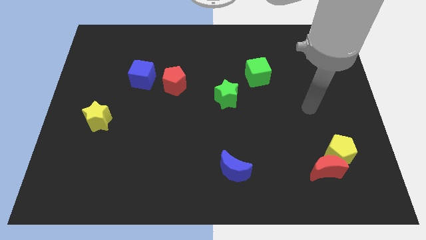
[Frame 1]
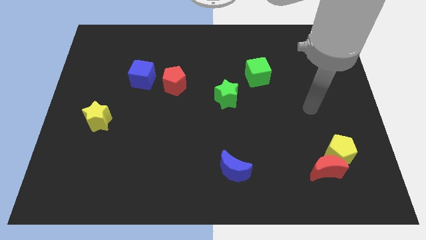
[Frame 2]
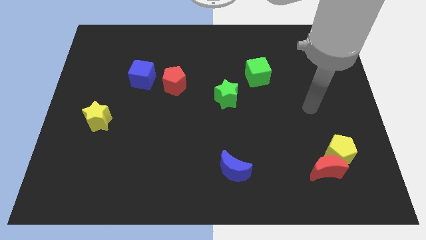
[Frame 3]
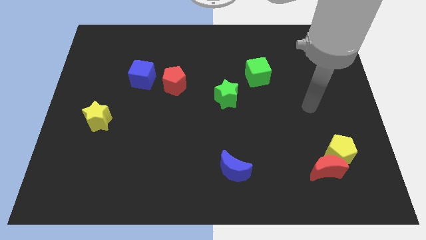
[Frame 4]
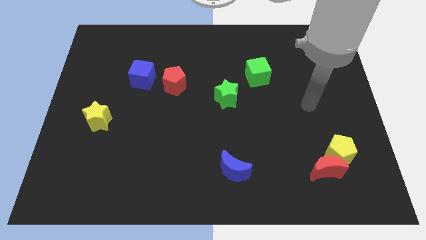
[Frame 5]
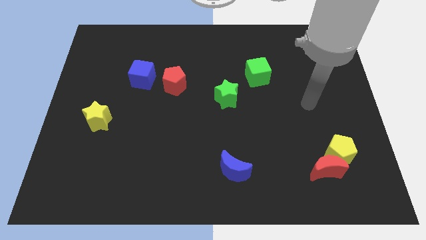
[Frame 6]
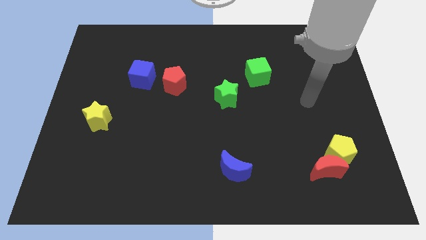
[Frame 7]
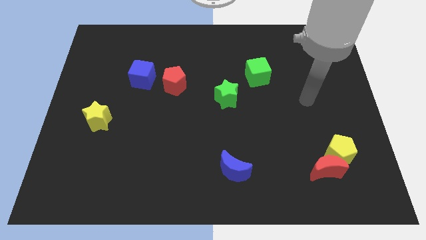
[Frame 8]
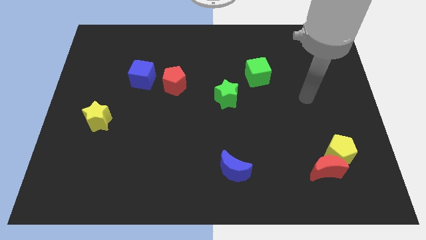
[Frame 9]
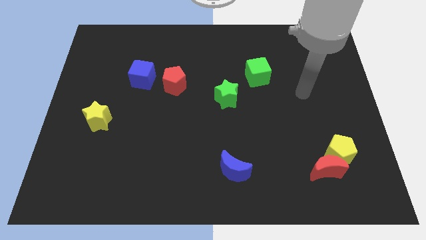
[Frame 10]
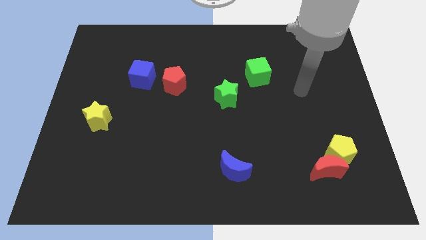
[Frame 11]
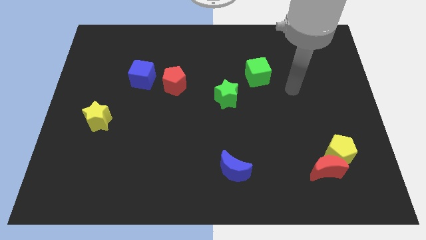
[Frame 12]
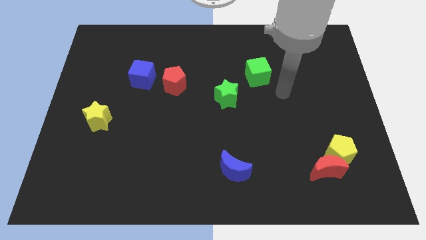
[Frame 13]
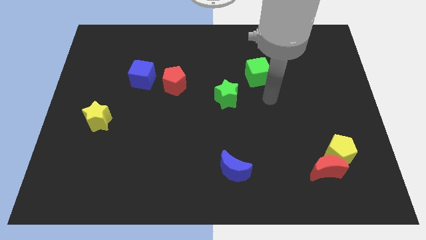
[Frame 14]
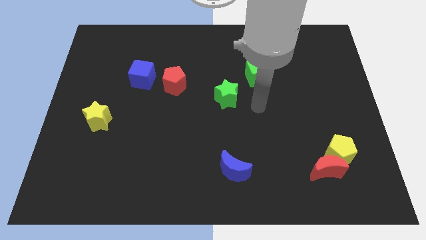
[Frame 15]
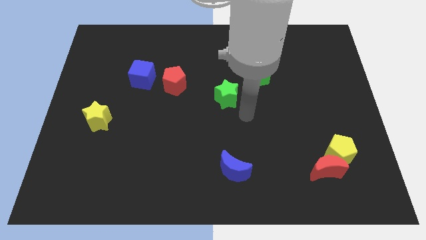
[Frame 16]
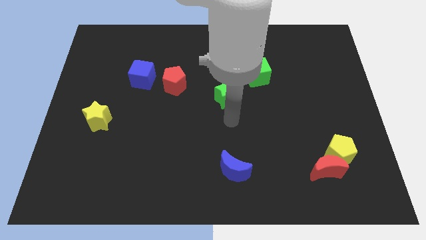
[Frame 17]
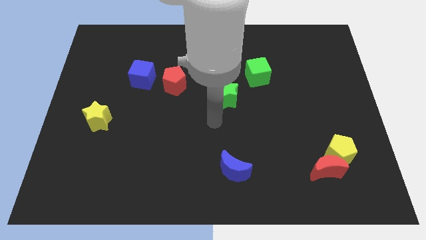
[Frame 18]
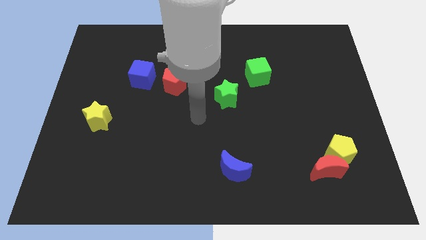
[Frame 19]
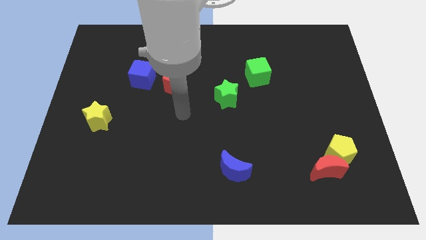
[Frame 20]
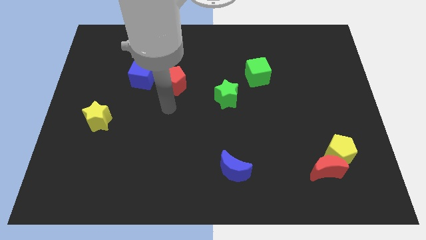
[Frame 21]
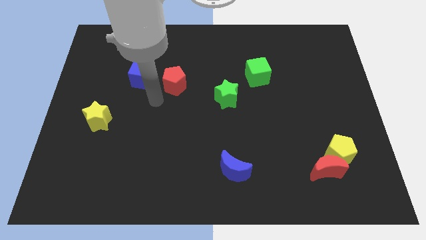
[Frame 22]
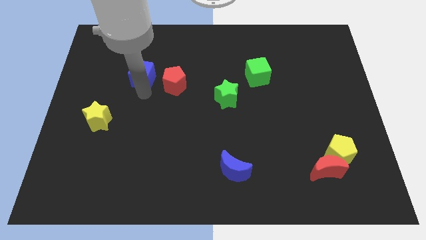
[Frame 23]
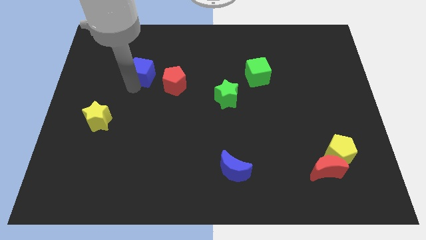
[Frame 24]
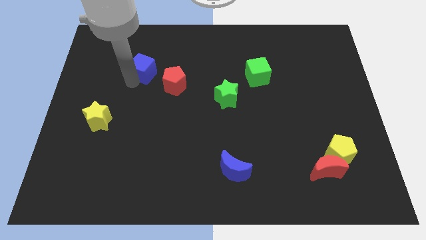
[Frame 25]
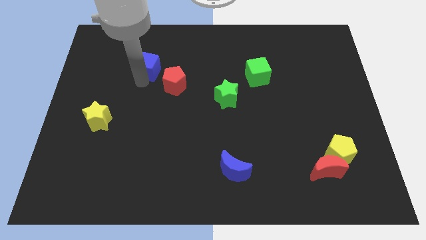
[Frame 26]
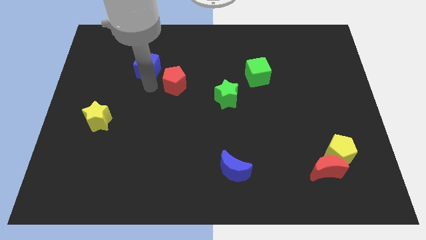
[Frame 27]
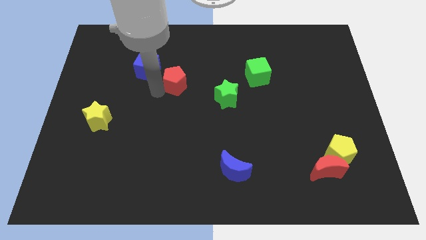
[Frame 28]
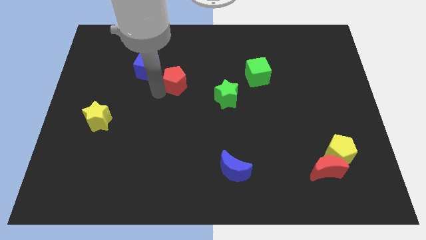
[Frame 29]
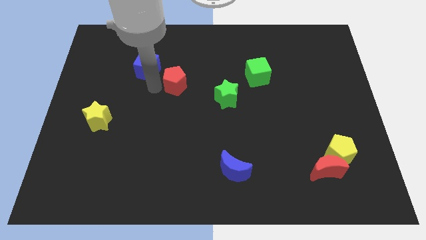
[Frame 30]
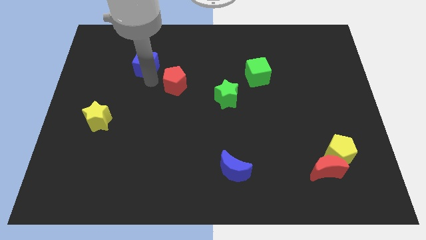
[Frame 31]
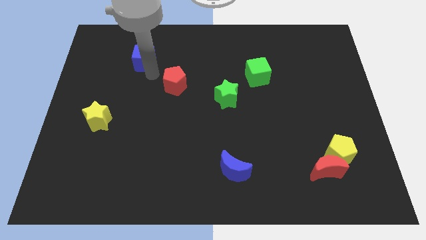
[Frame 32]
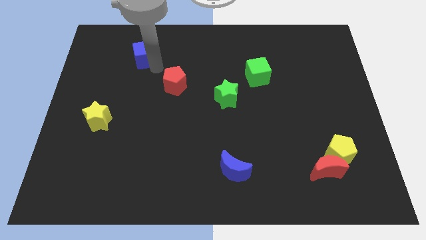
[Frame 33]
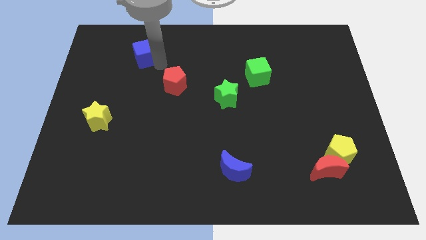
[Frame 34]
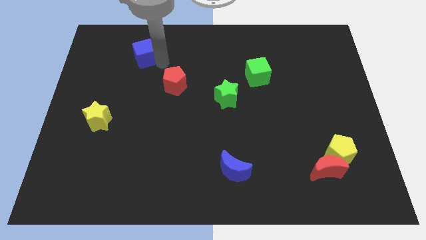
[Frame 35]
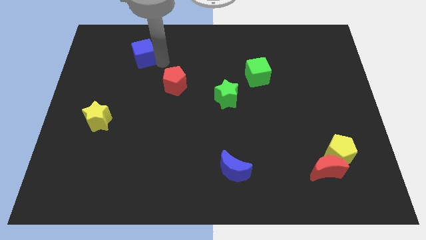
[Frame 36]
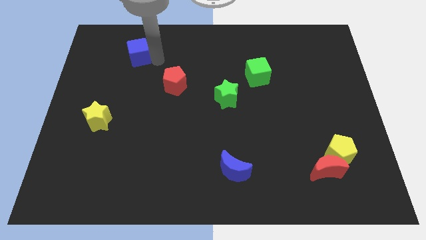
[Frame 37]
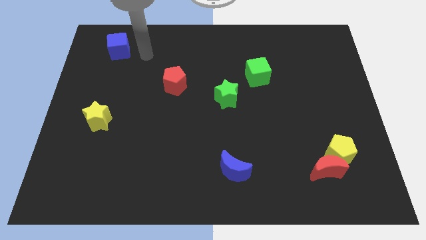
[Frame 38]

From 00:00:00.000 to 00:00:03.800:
push blue cube upwards to the top left side of the board

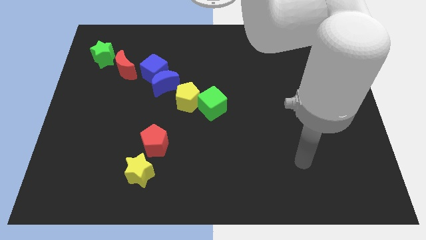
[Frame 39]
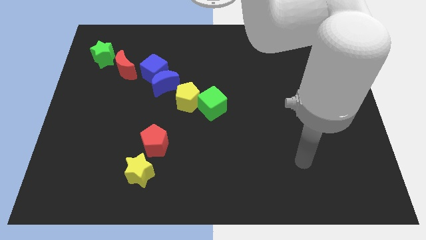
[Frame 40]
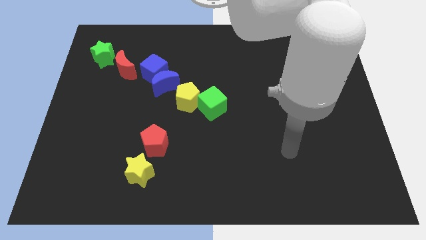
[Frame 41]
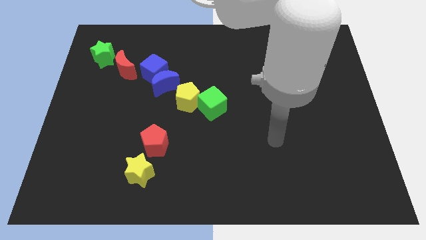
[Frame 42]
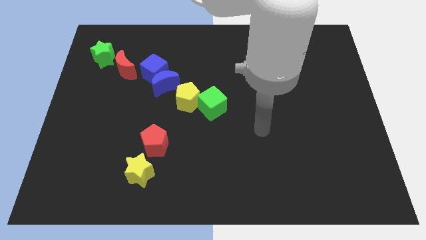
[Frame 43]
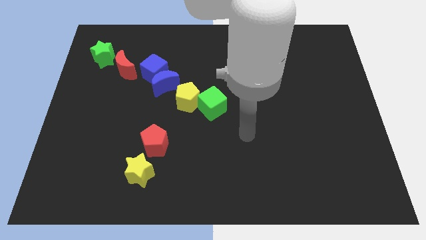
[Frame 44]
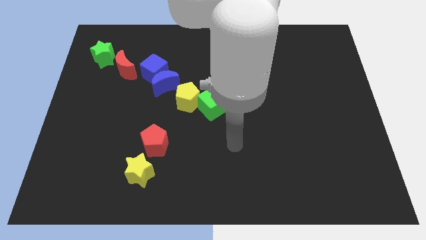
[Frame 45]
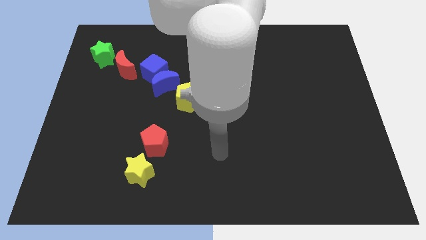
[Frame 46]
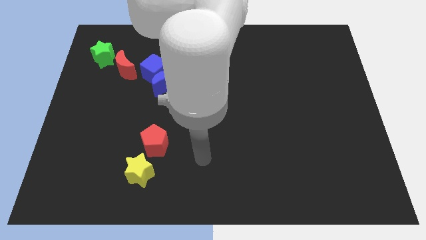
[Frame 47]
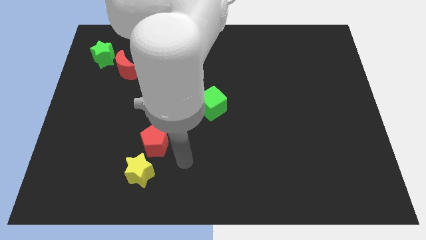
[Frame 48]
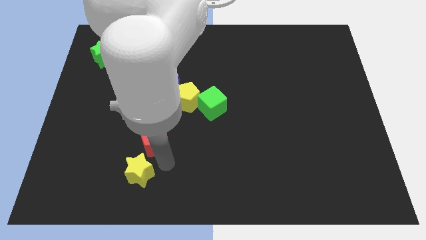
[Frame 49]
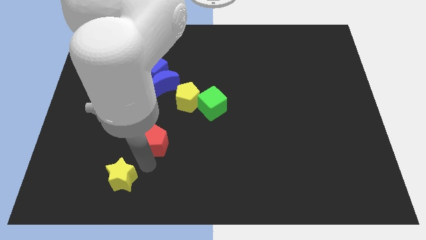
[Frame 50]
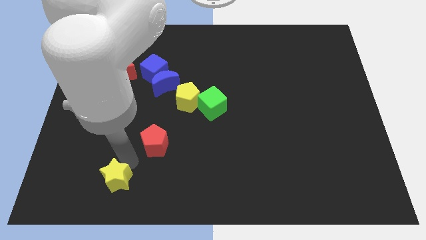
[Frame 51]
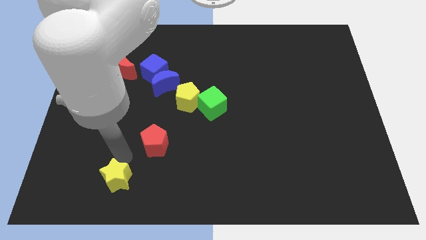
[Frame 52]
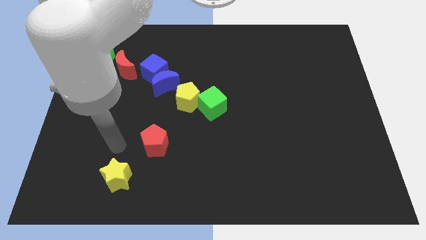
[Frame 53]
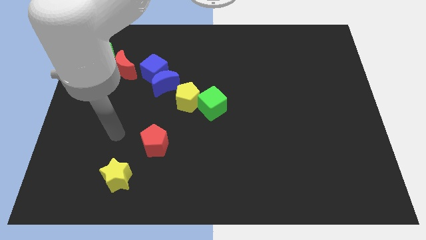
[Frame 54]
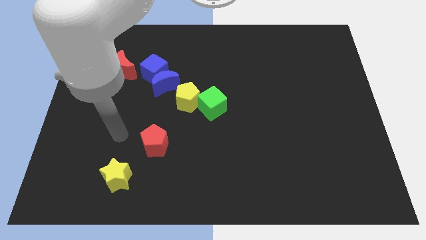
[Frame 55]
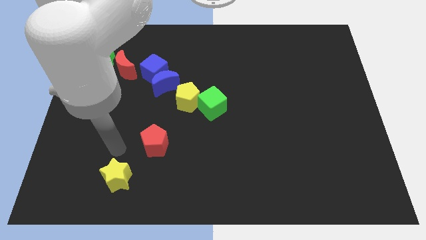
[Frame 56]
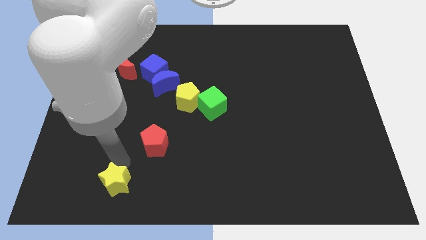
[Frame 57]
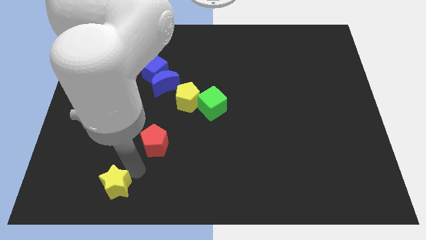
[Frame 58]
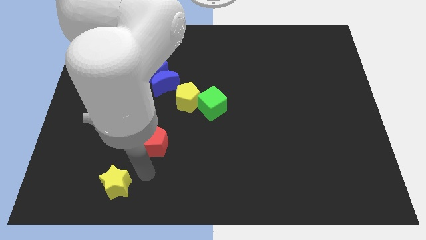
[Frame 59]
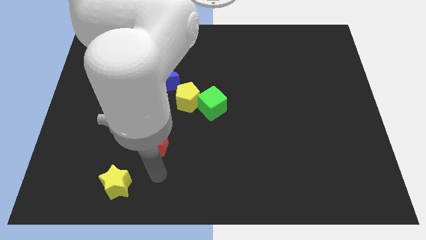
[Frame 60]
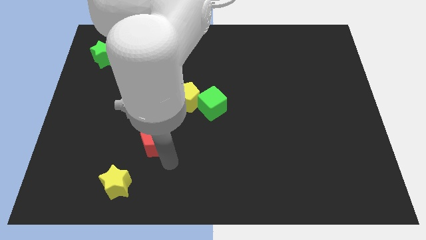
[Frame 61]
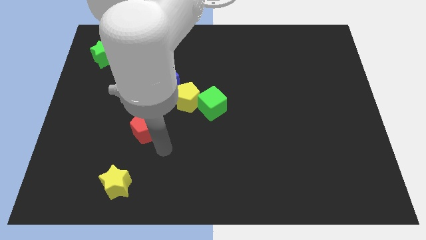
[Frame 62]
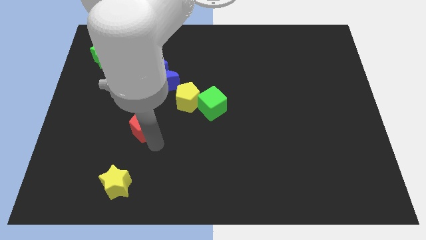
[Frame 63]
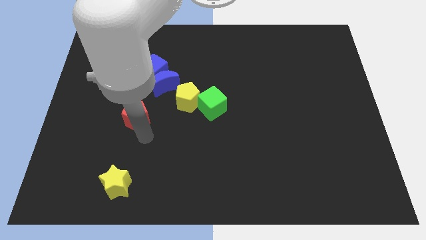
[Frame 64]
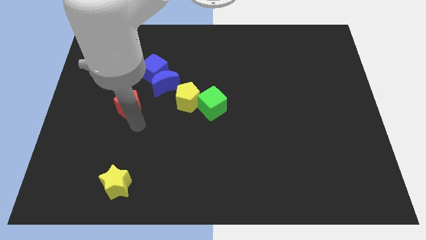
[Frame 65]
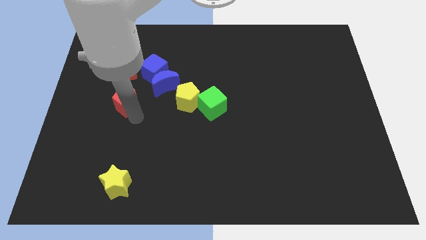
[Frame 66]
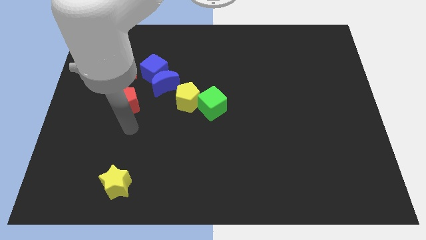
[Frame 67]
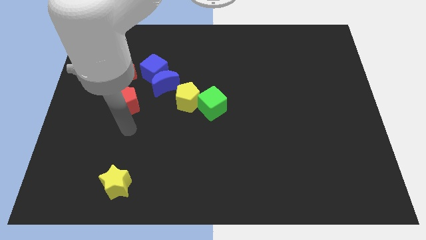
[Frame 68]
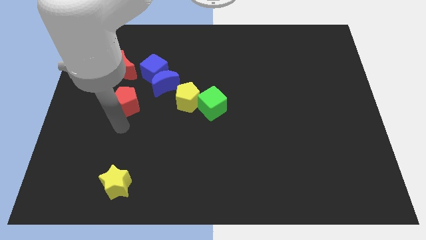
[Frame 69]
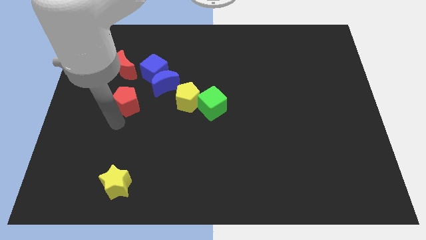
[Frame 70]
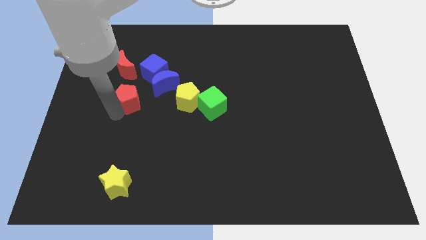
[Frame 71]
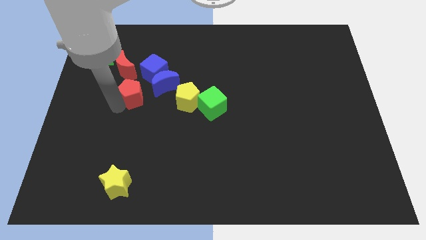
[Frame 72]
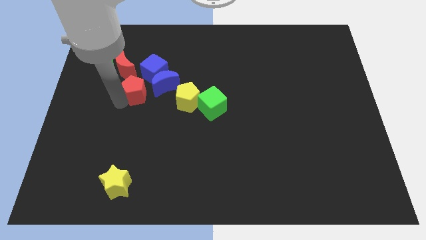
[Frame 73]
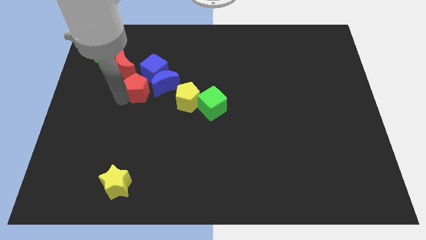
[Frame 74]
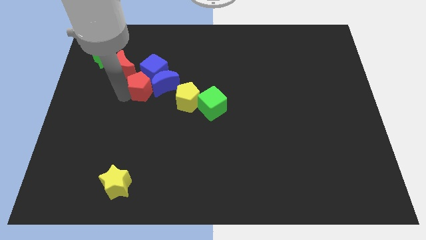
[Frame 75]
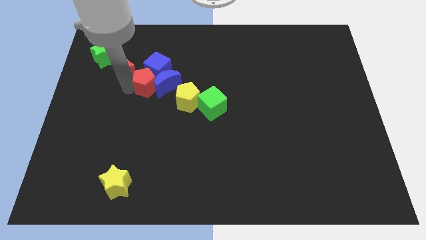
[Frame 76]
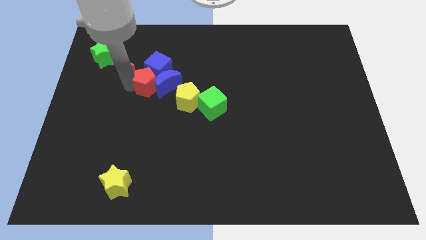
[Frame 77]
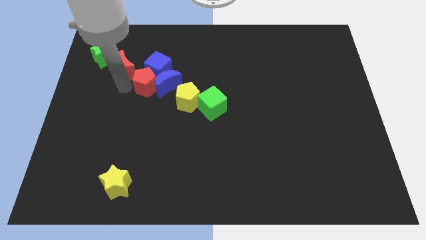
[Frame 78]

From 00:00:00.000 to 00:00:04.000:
move the red pentagon between the red crescent blue crescent

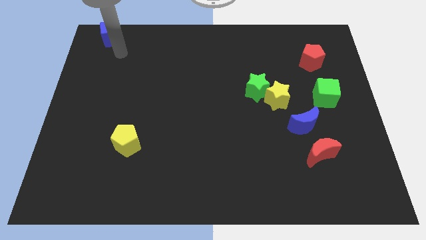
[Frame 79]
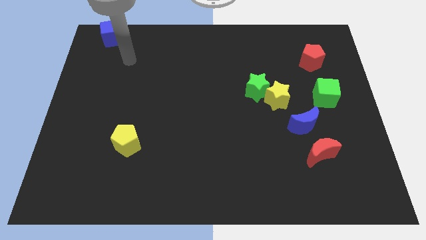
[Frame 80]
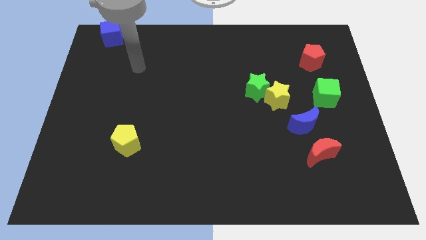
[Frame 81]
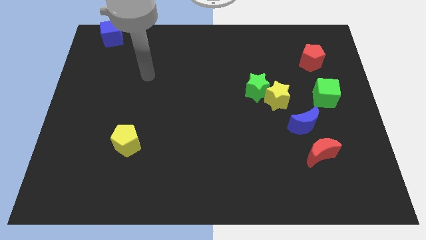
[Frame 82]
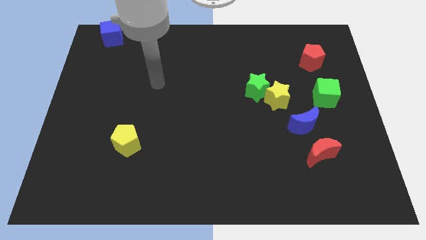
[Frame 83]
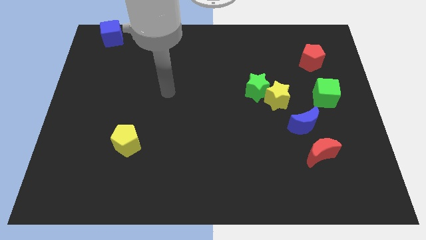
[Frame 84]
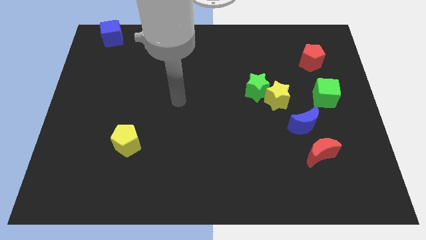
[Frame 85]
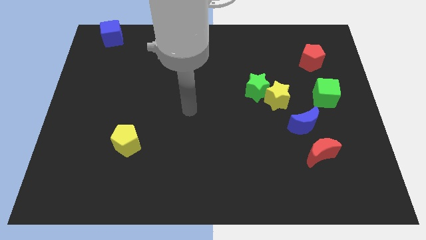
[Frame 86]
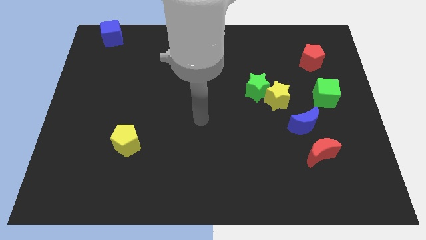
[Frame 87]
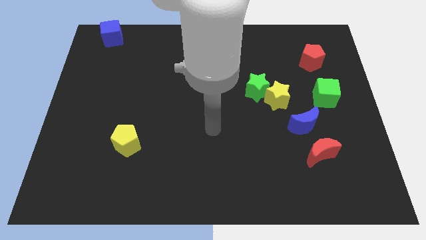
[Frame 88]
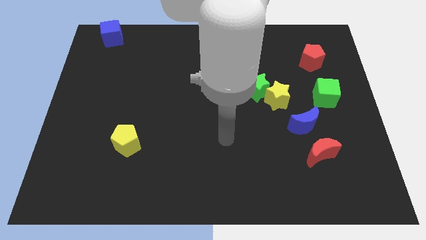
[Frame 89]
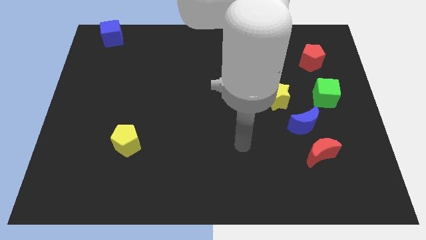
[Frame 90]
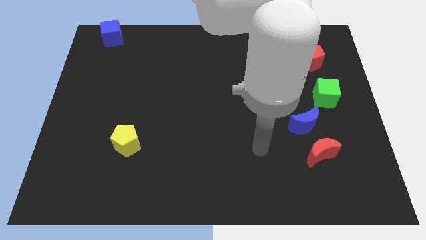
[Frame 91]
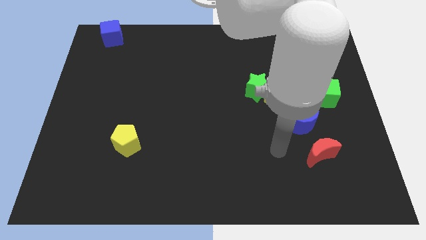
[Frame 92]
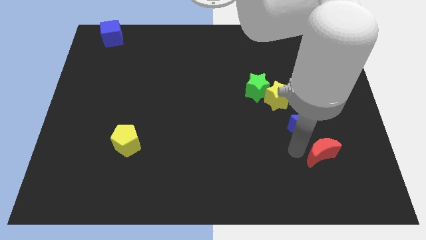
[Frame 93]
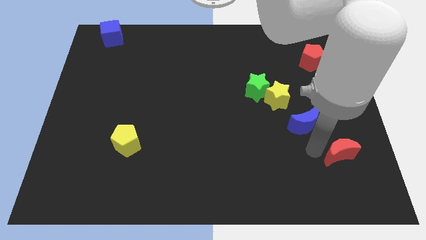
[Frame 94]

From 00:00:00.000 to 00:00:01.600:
move your arm towards the red crescent
